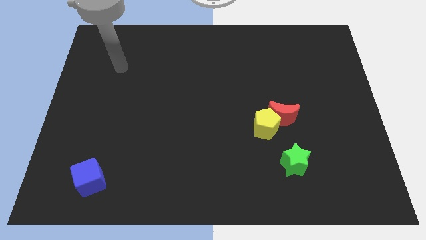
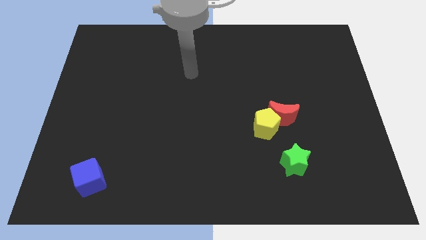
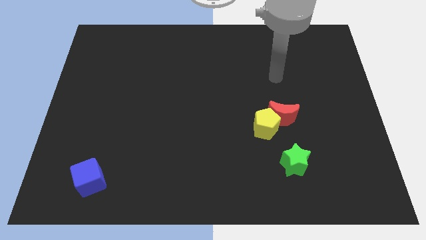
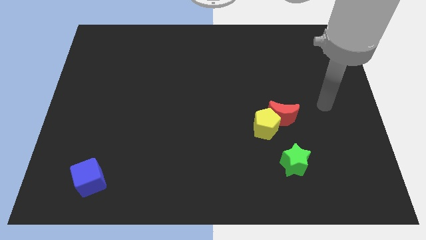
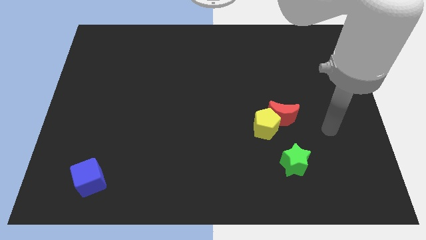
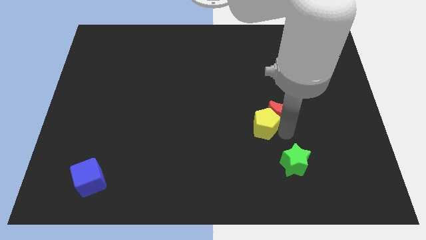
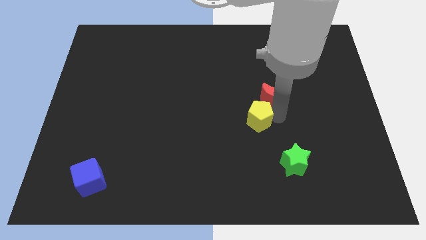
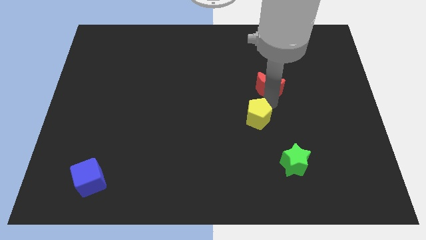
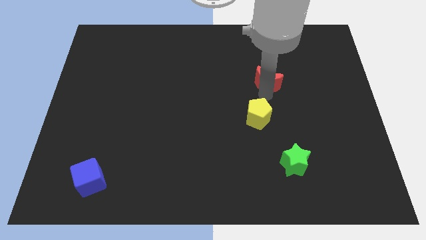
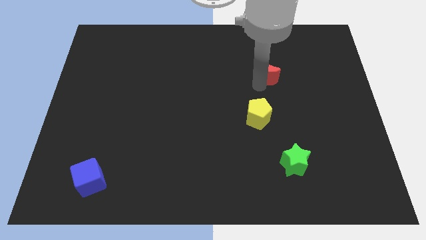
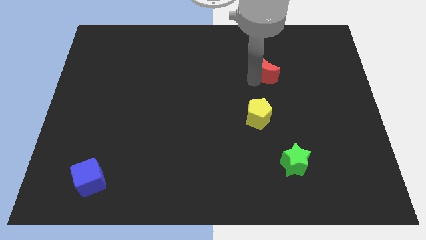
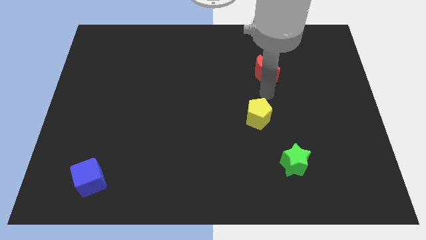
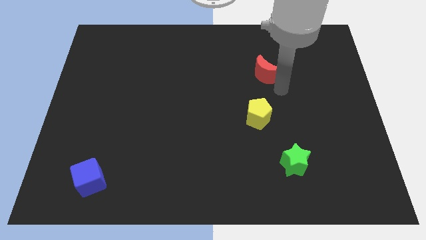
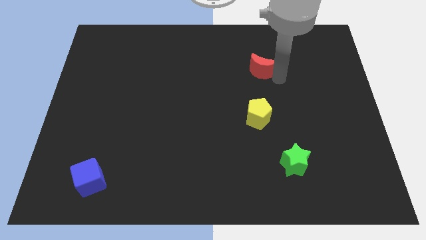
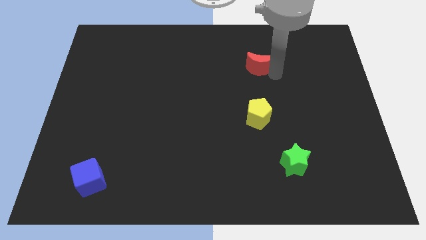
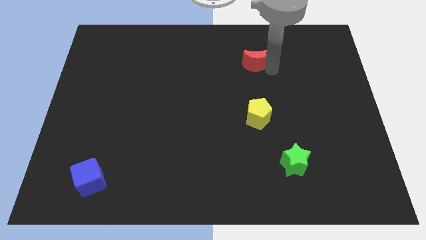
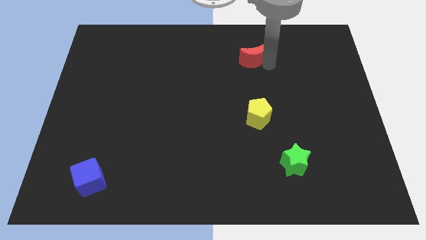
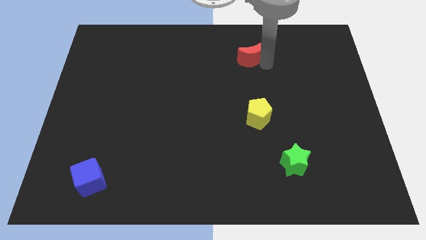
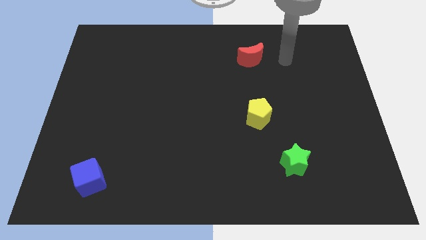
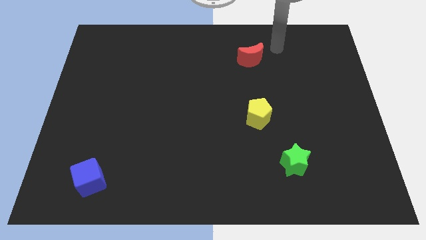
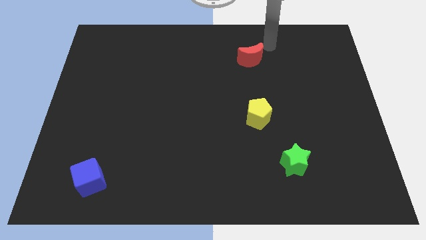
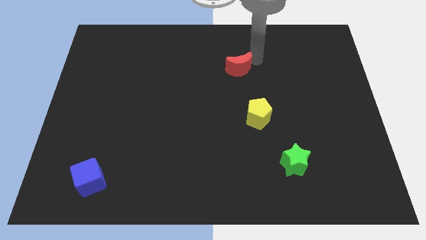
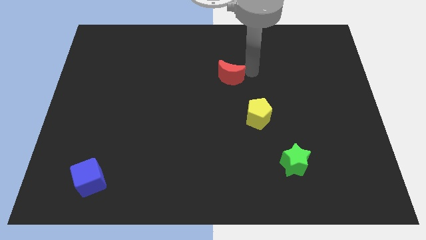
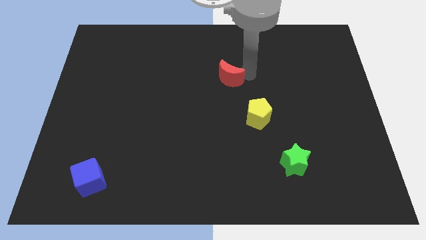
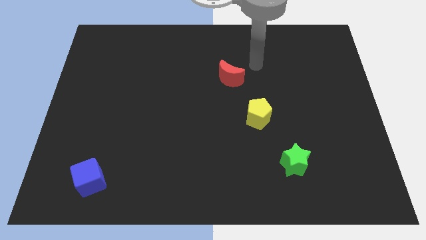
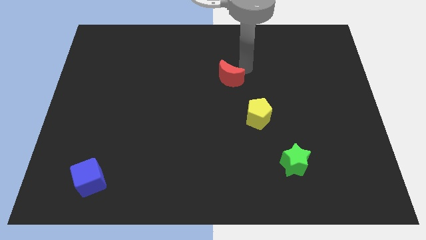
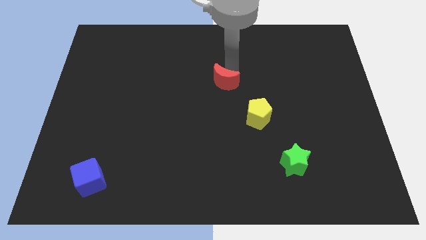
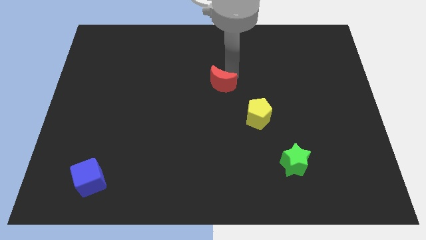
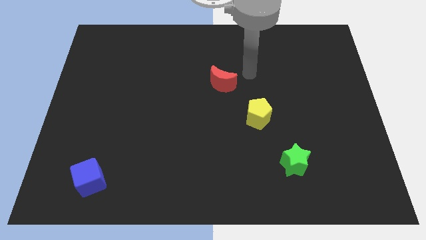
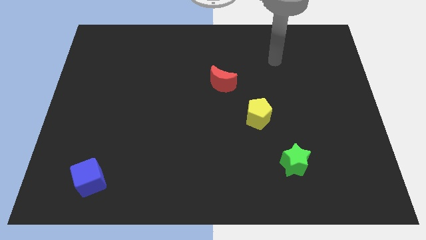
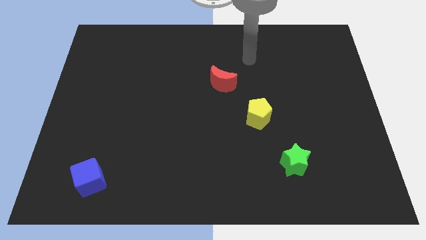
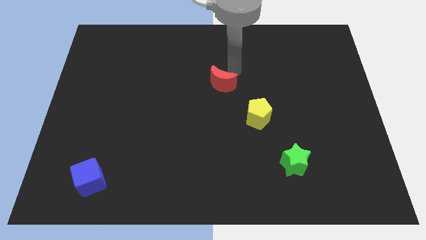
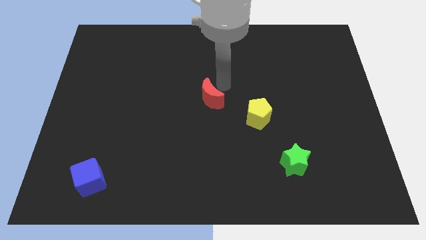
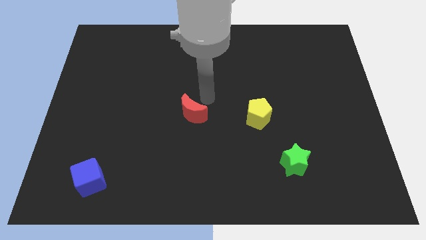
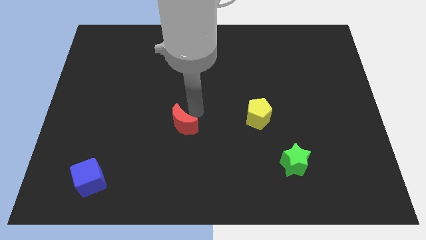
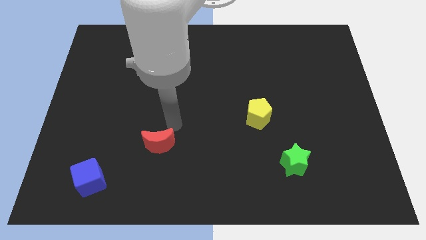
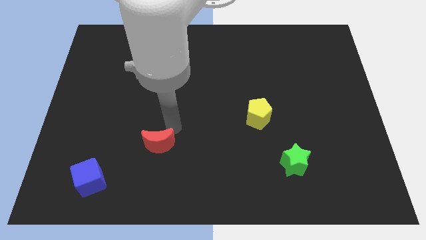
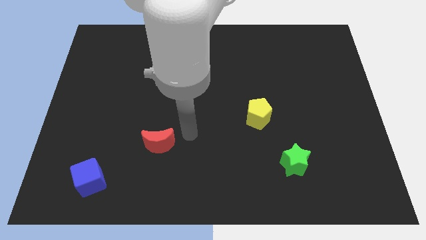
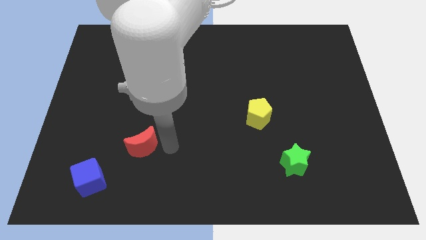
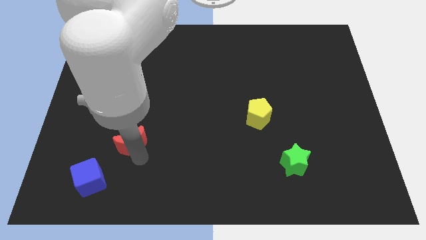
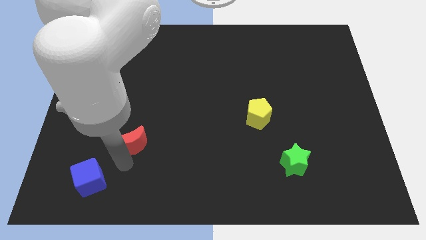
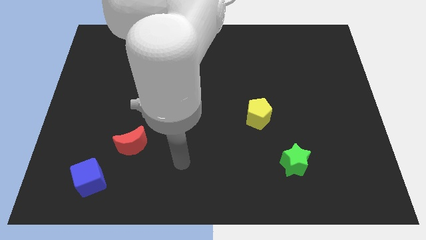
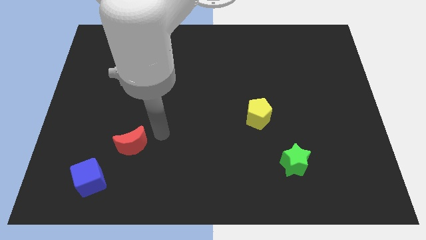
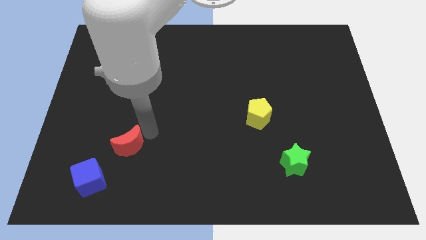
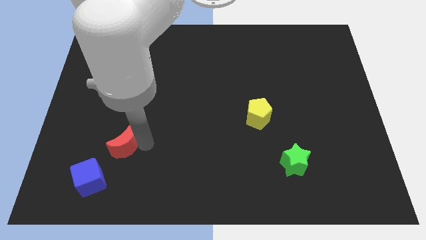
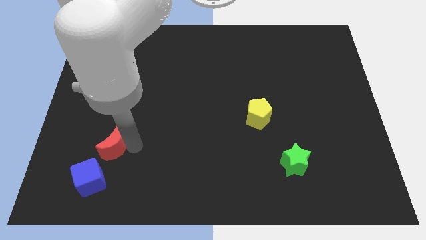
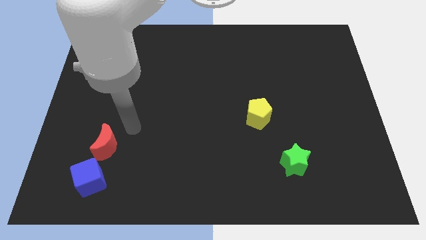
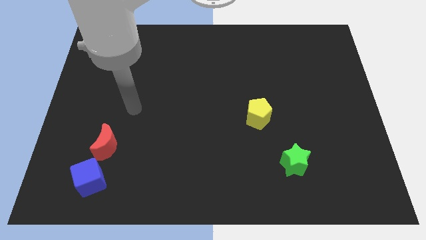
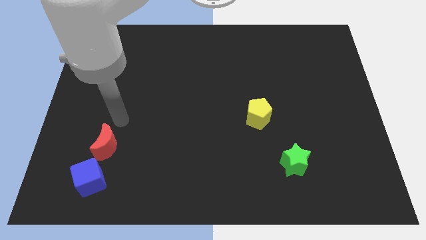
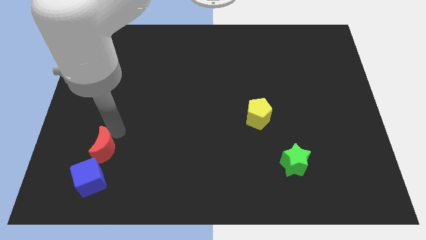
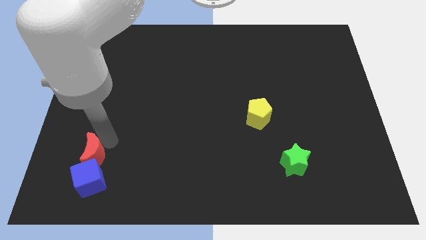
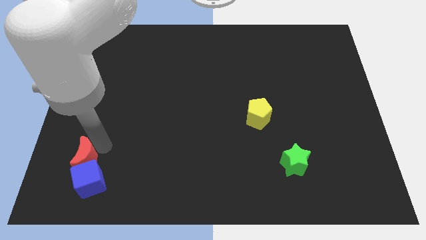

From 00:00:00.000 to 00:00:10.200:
slide the red moon next to the blue block

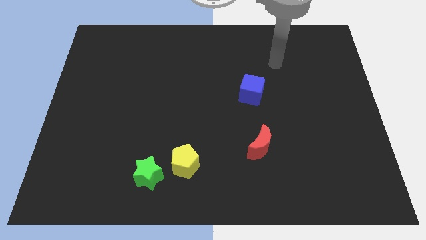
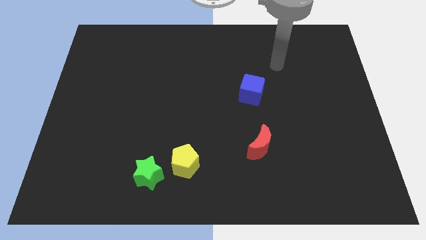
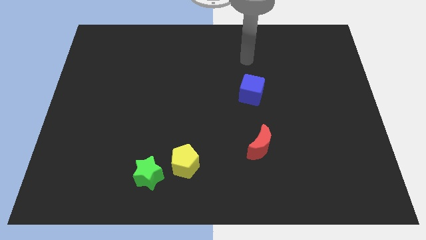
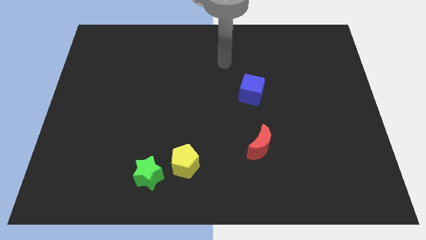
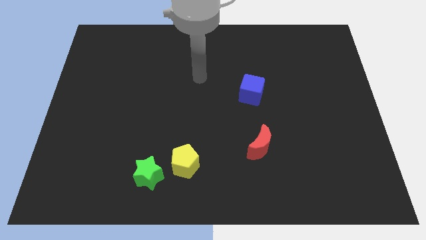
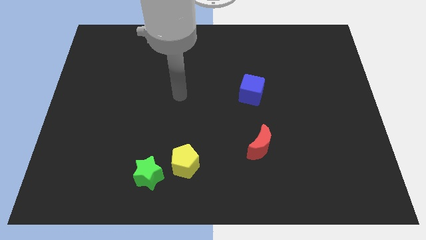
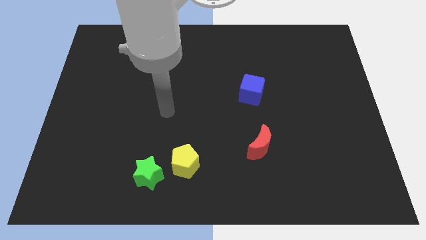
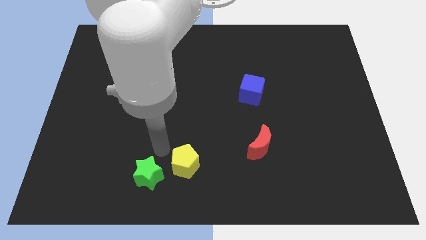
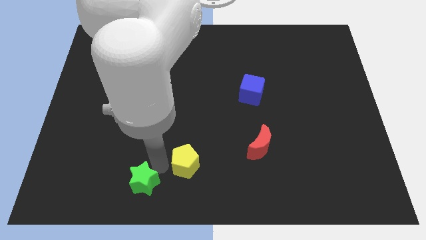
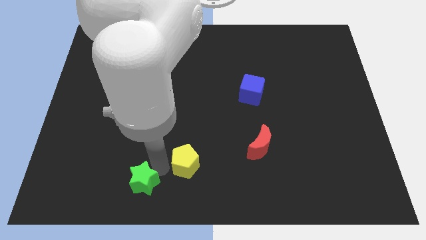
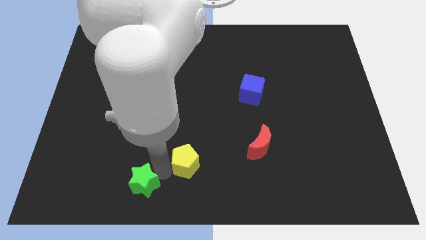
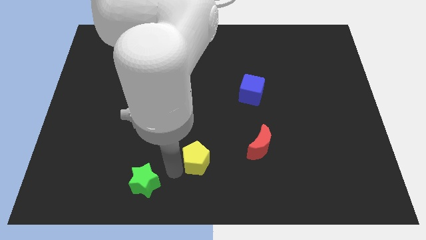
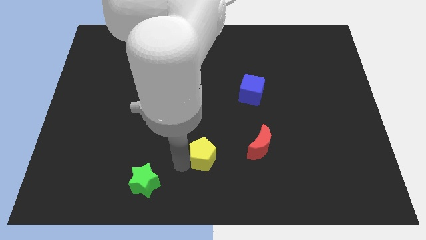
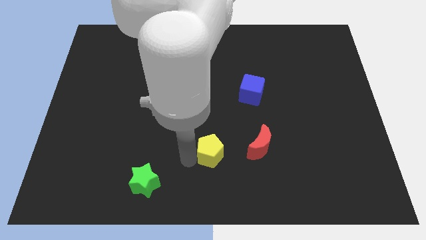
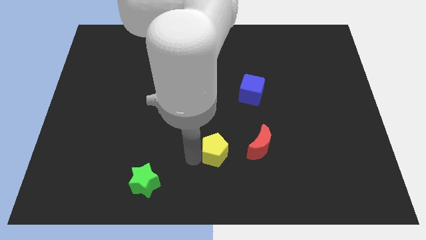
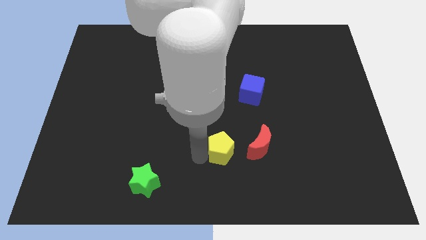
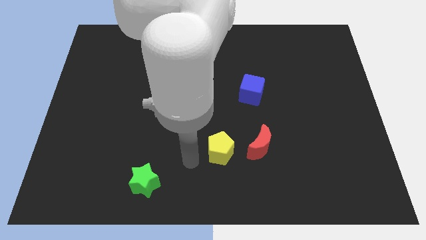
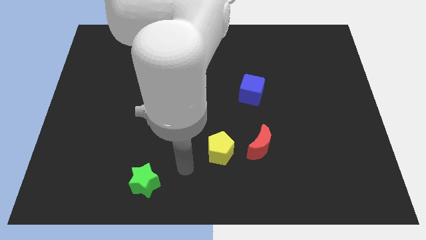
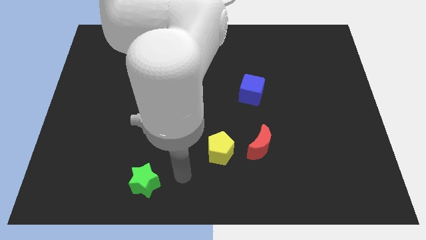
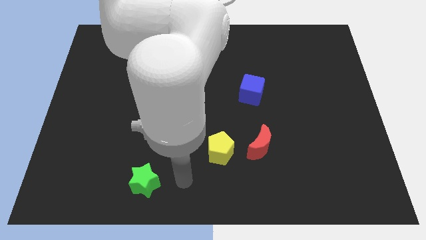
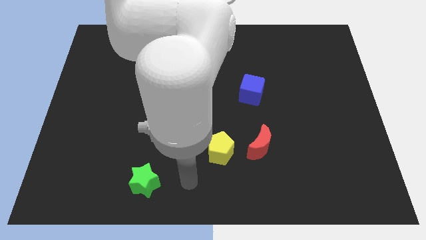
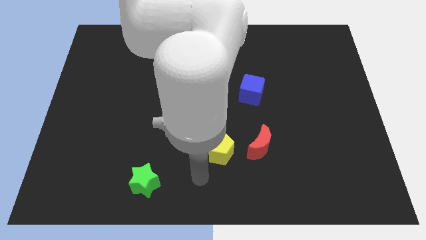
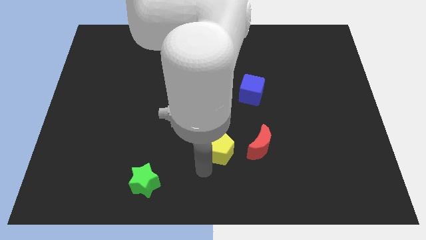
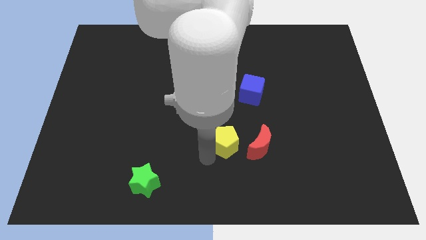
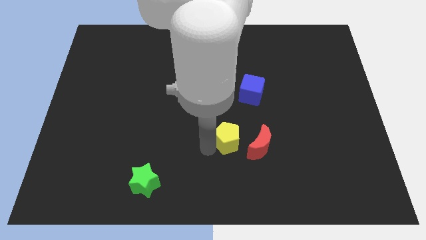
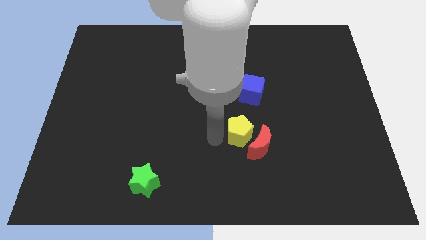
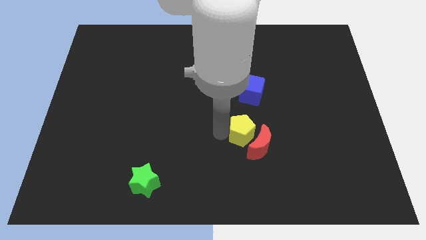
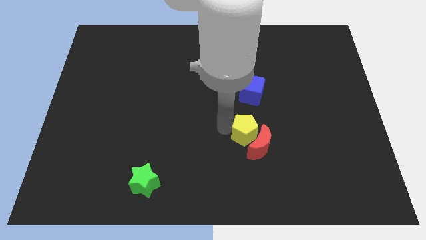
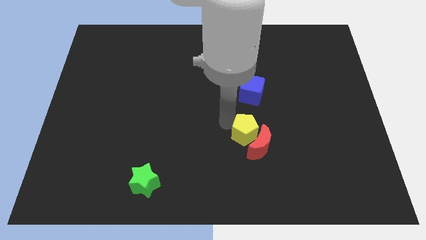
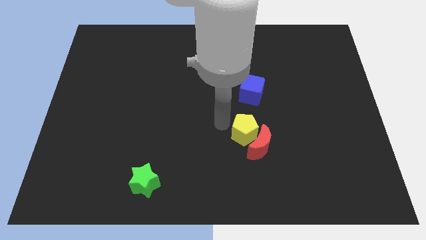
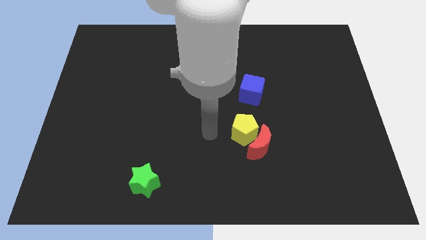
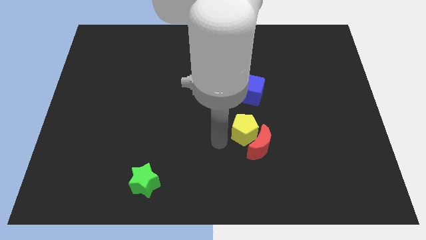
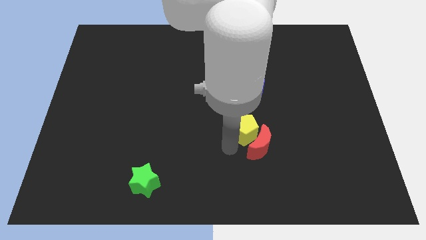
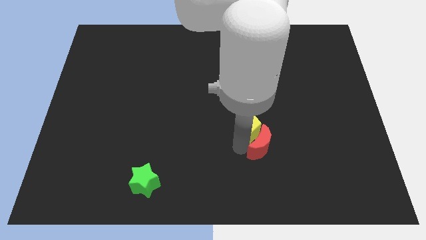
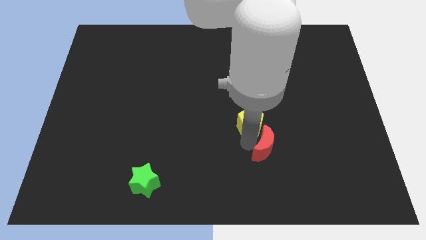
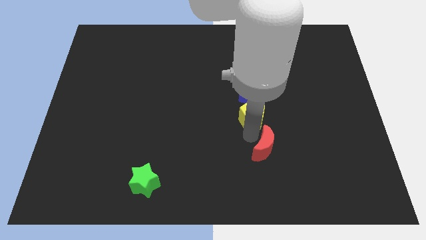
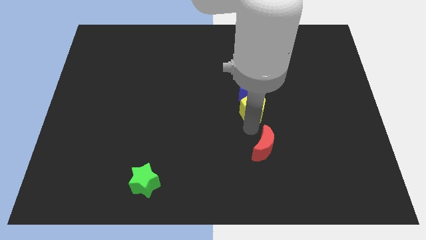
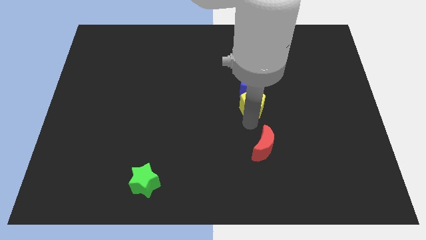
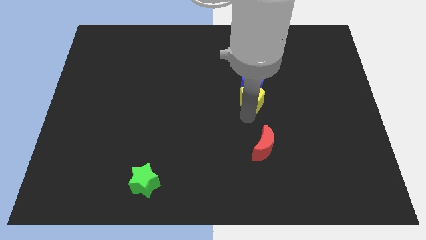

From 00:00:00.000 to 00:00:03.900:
slide the yellow block close to the cube
